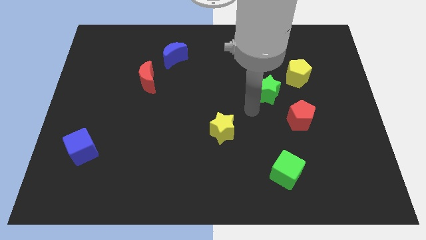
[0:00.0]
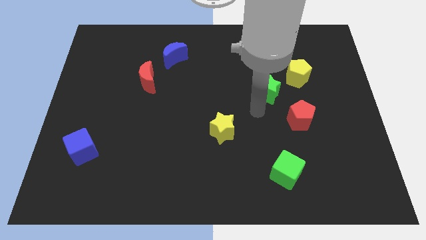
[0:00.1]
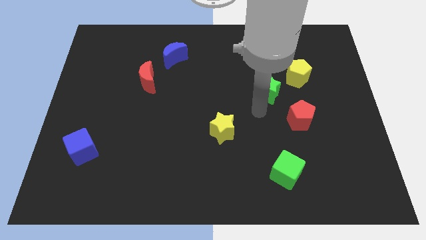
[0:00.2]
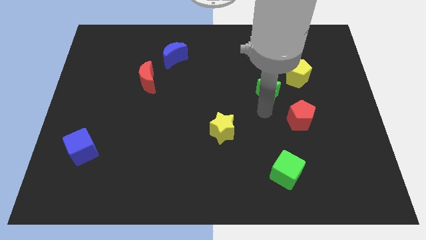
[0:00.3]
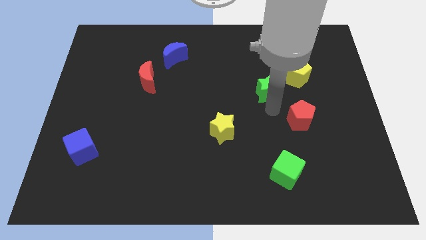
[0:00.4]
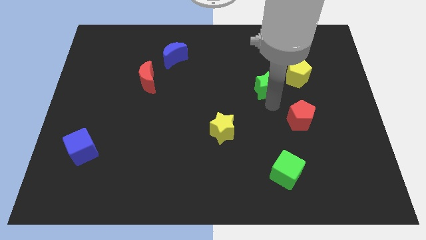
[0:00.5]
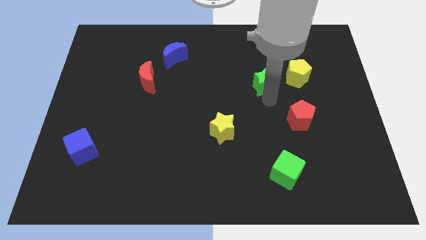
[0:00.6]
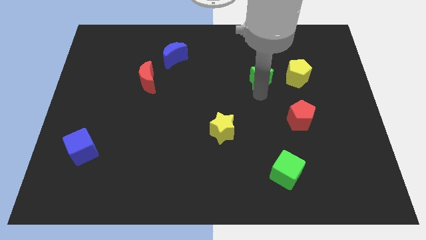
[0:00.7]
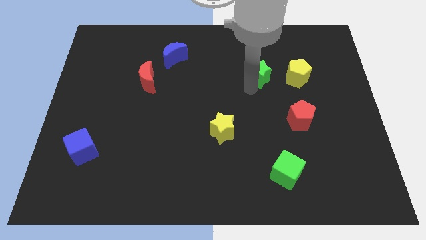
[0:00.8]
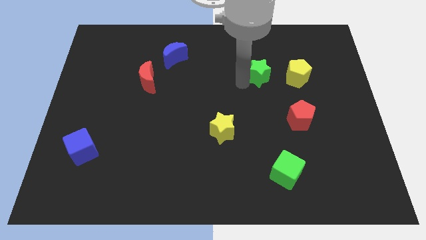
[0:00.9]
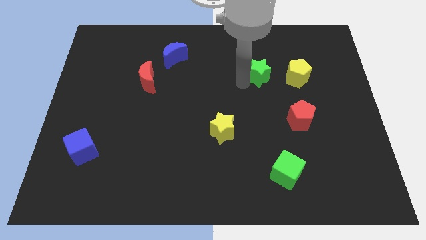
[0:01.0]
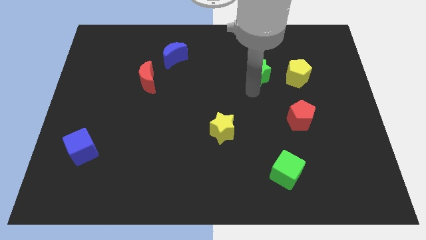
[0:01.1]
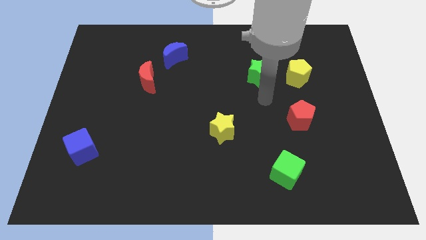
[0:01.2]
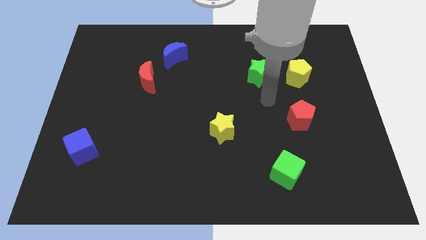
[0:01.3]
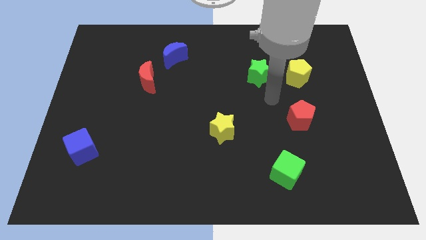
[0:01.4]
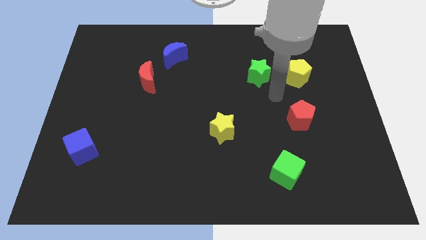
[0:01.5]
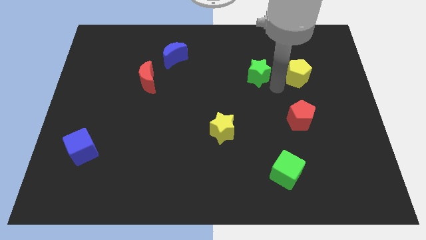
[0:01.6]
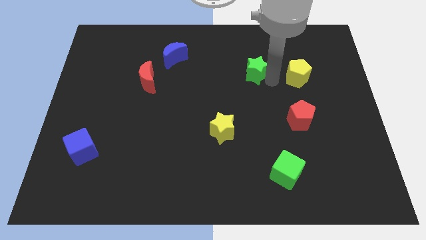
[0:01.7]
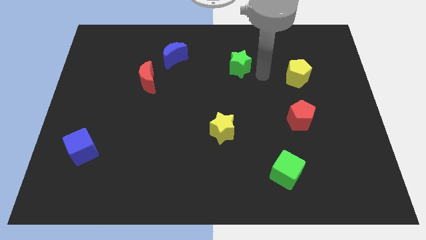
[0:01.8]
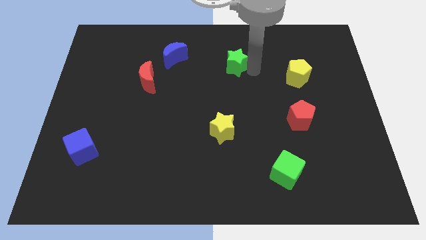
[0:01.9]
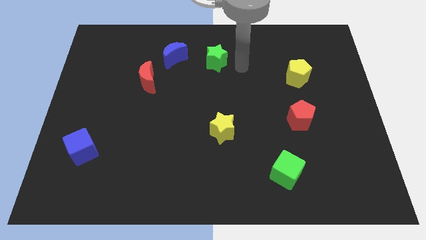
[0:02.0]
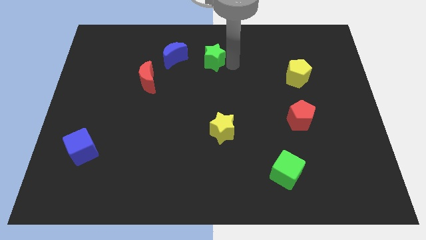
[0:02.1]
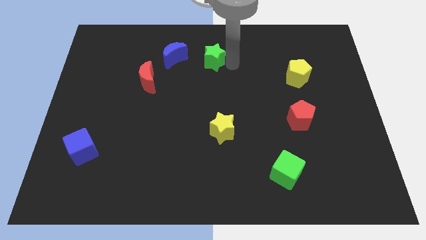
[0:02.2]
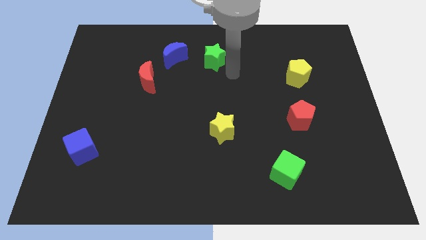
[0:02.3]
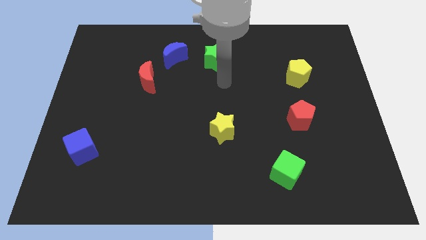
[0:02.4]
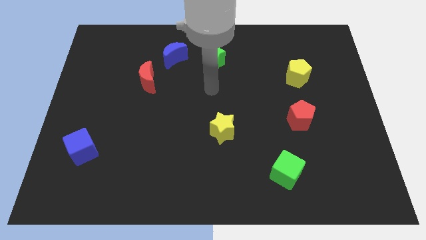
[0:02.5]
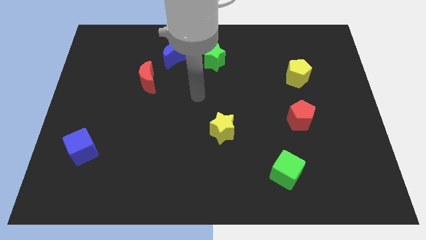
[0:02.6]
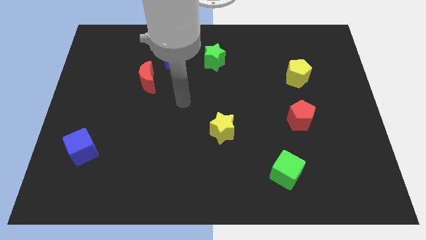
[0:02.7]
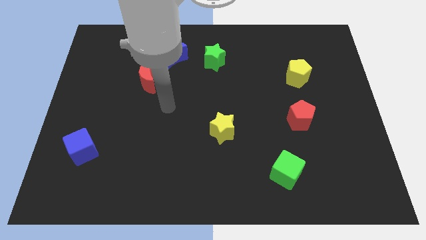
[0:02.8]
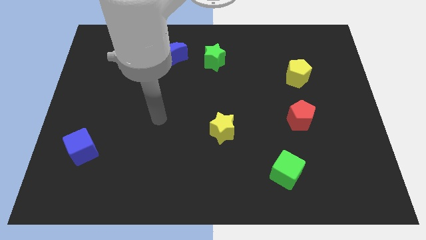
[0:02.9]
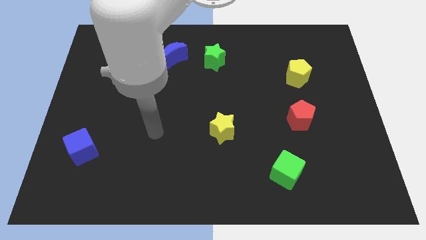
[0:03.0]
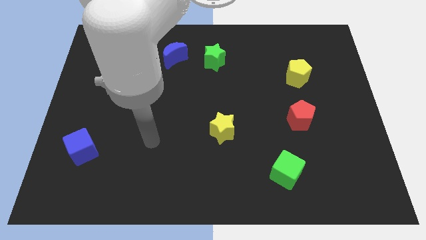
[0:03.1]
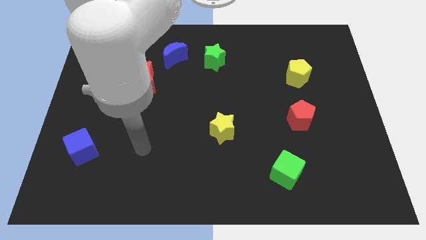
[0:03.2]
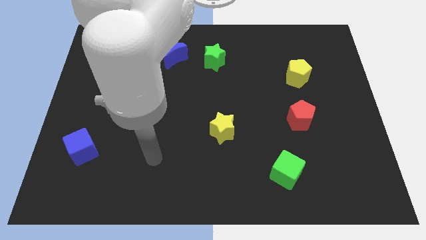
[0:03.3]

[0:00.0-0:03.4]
place the green star right of the blue moon

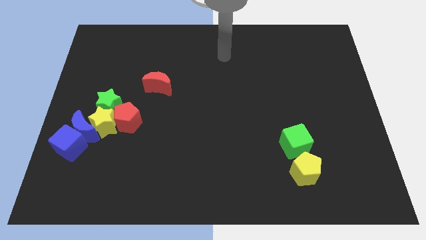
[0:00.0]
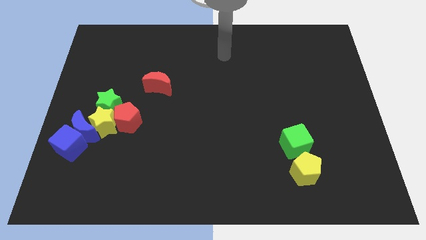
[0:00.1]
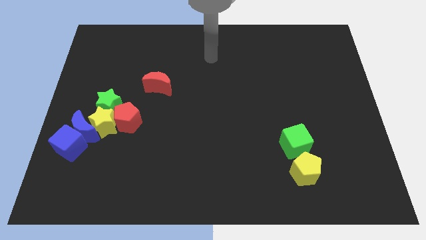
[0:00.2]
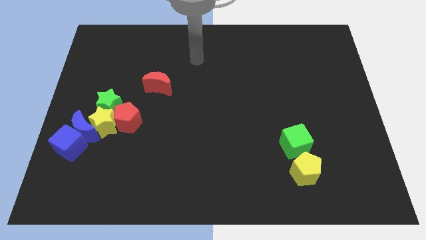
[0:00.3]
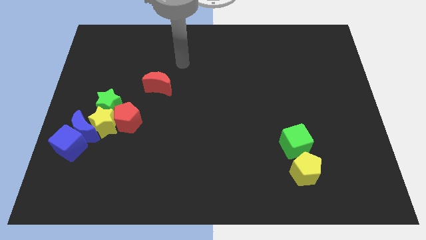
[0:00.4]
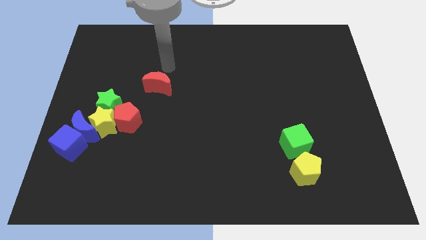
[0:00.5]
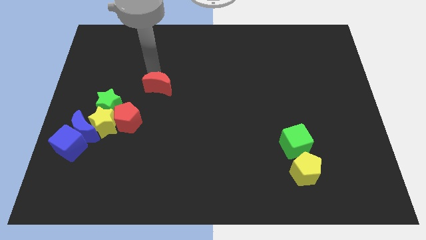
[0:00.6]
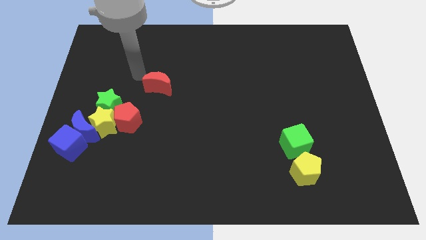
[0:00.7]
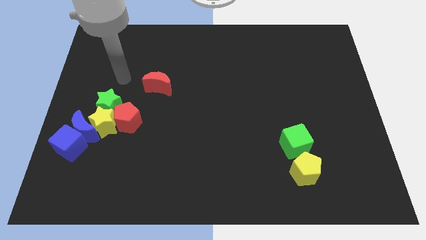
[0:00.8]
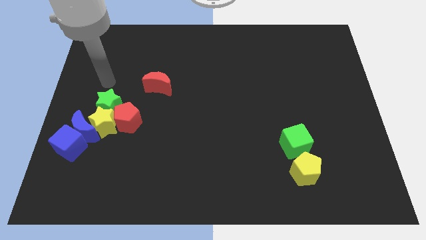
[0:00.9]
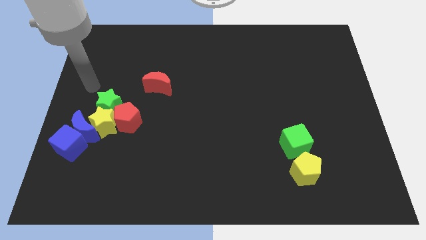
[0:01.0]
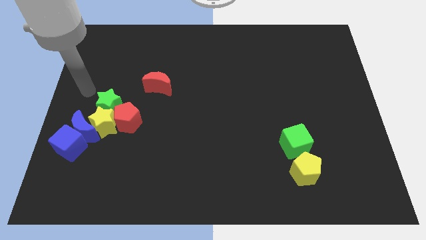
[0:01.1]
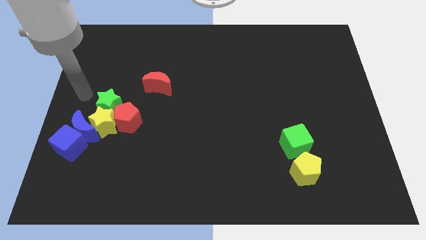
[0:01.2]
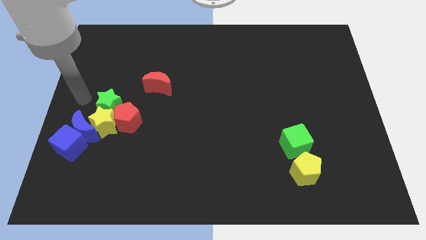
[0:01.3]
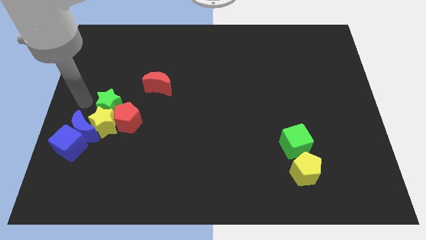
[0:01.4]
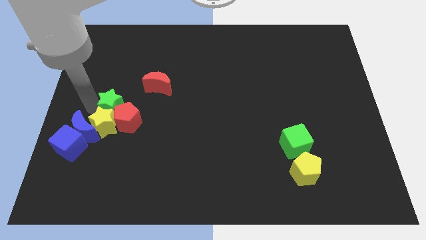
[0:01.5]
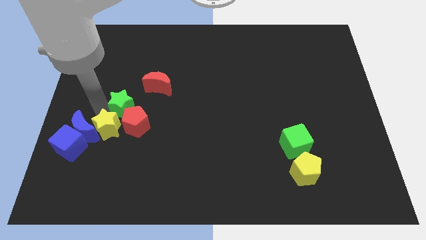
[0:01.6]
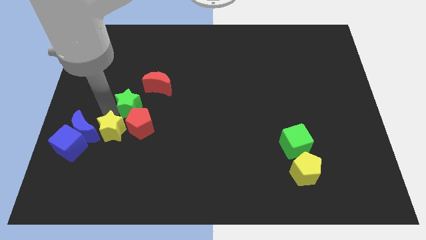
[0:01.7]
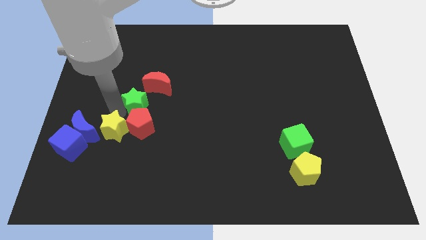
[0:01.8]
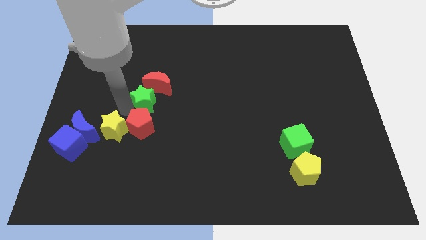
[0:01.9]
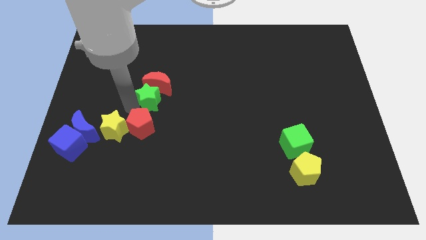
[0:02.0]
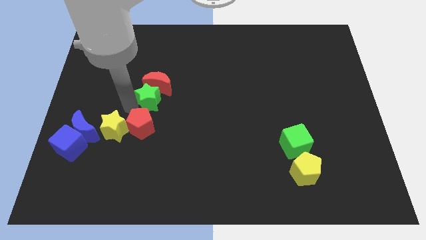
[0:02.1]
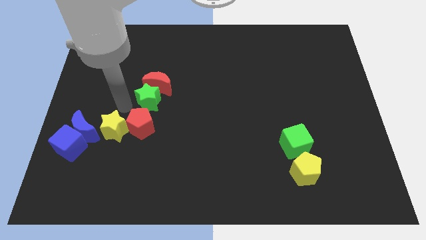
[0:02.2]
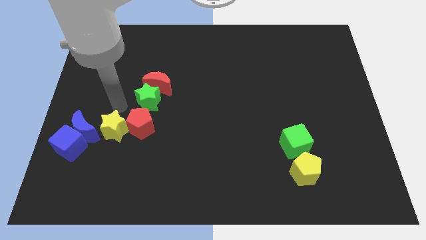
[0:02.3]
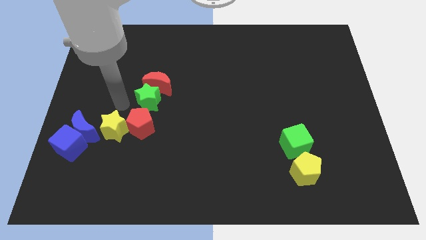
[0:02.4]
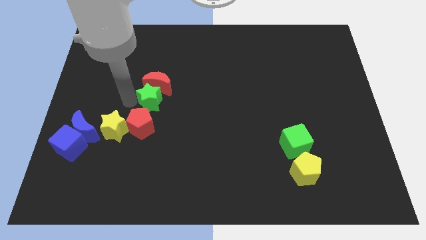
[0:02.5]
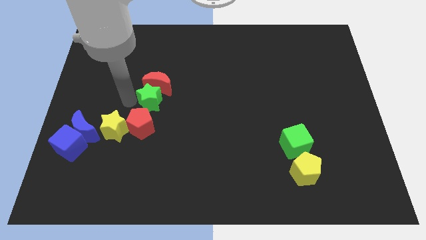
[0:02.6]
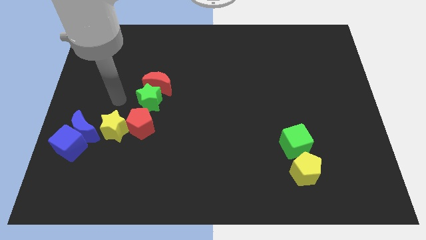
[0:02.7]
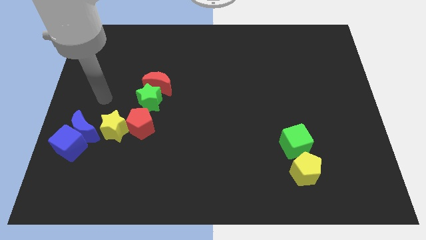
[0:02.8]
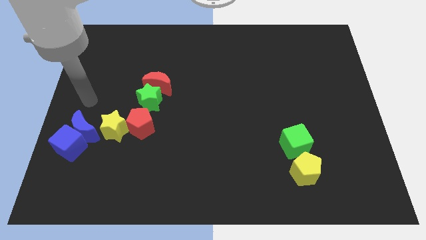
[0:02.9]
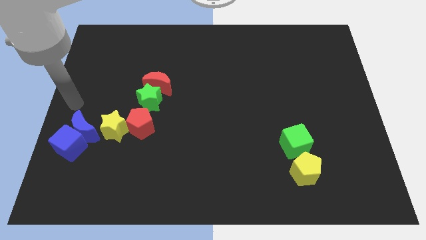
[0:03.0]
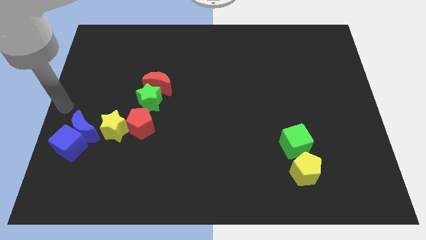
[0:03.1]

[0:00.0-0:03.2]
move the green star into the red moon

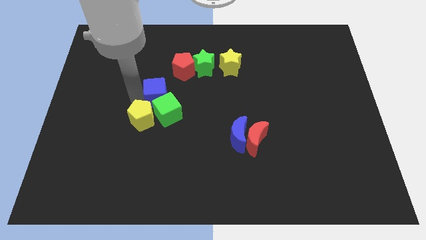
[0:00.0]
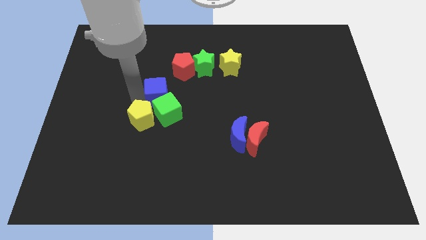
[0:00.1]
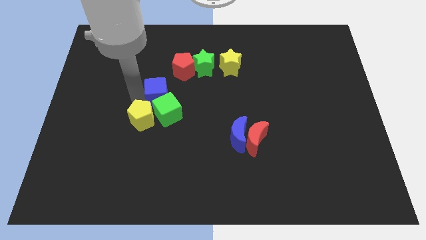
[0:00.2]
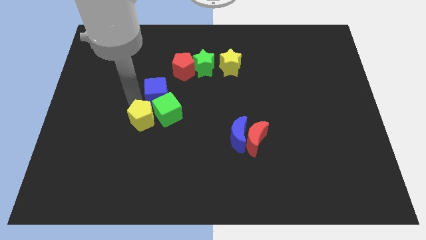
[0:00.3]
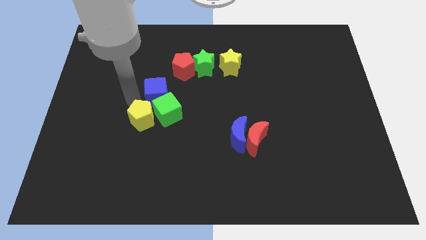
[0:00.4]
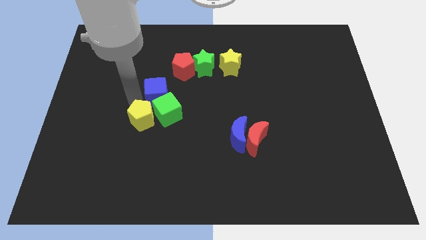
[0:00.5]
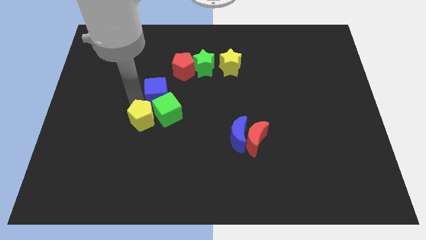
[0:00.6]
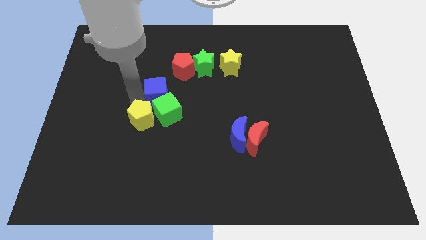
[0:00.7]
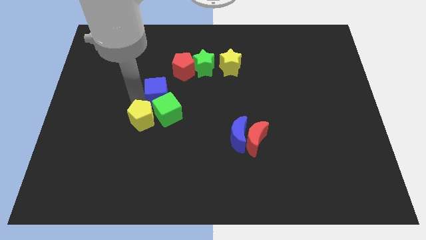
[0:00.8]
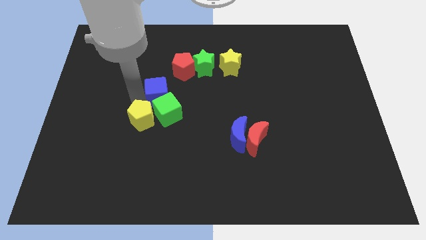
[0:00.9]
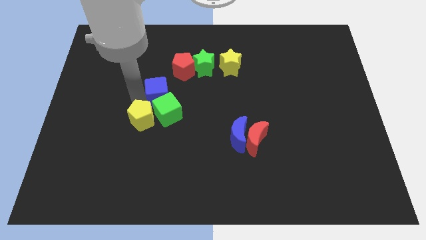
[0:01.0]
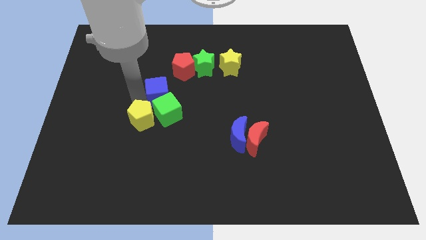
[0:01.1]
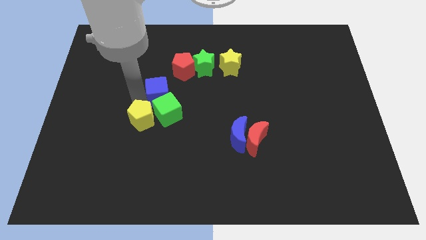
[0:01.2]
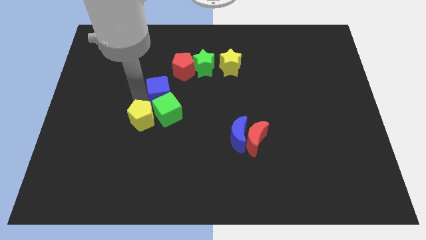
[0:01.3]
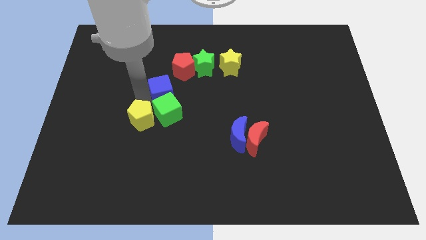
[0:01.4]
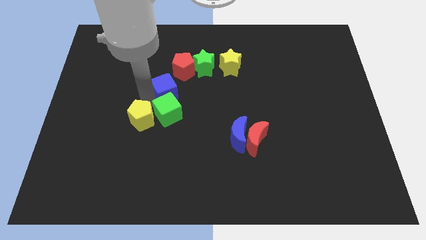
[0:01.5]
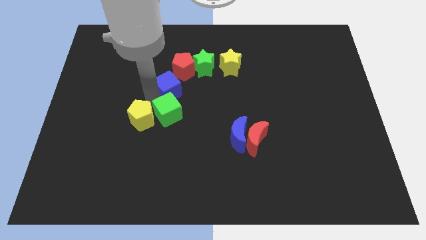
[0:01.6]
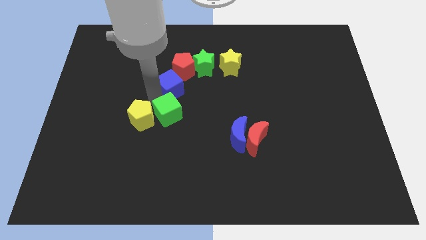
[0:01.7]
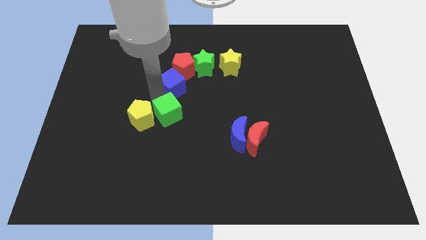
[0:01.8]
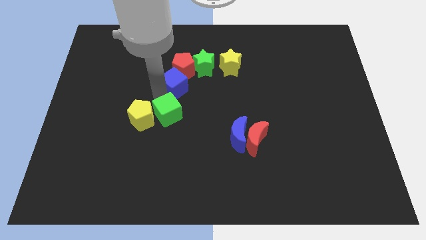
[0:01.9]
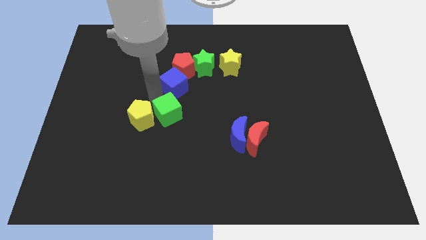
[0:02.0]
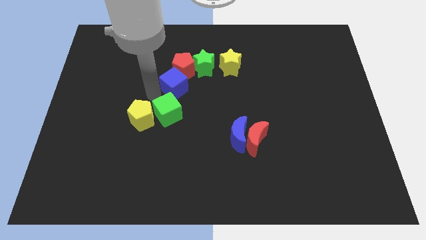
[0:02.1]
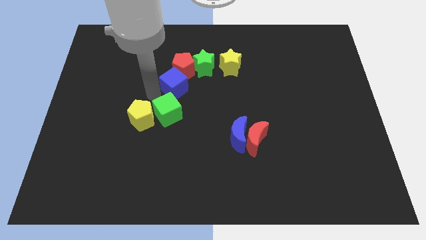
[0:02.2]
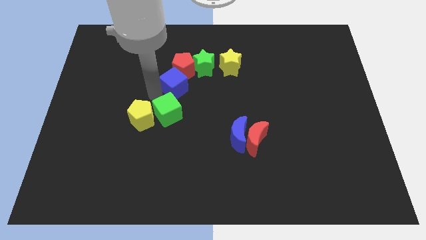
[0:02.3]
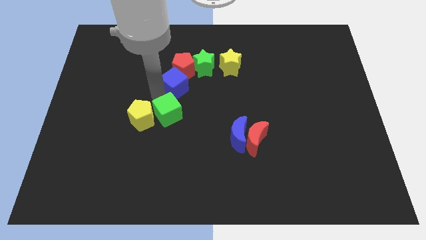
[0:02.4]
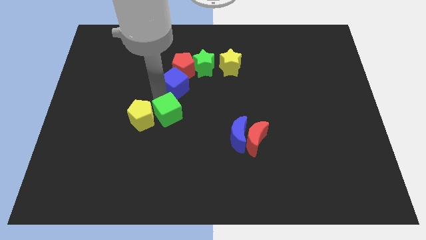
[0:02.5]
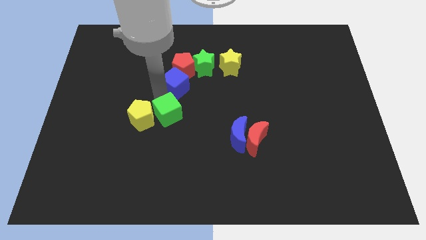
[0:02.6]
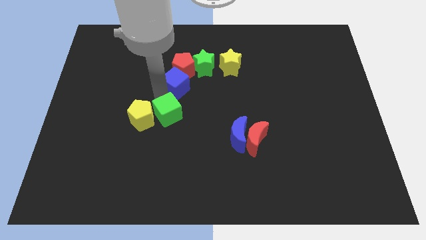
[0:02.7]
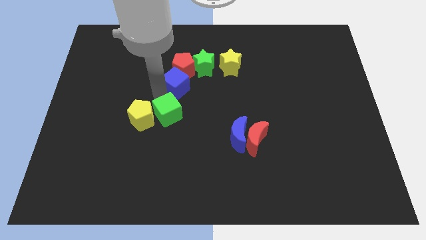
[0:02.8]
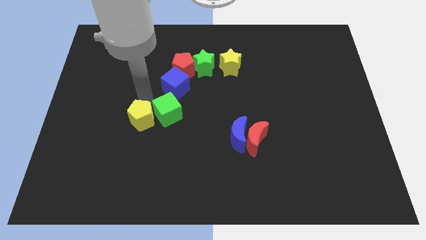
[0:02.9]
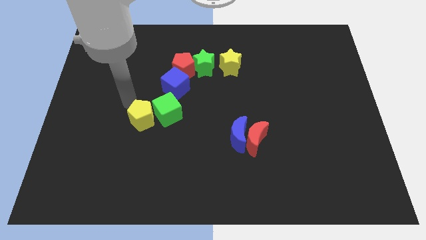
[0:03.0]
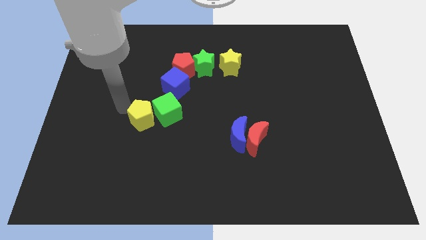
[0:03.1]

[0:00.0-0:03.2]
place blue block above the green block
